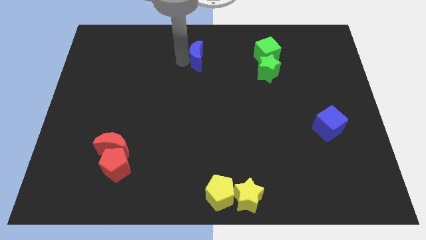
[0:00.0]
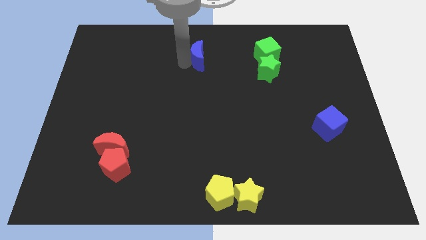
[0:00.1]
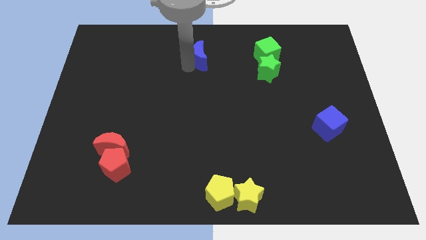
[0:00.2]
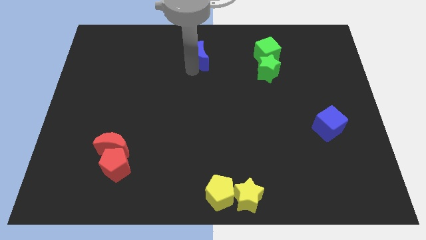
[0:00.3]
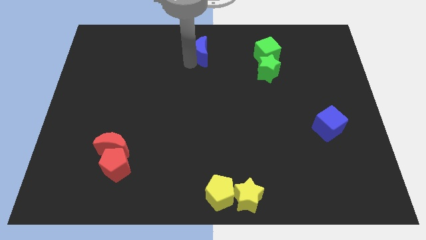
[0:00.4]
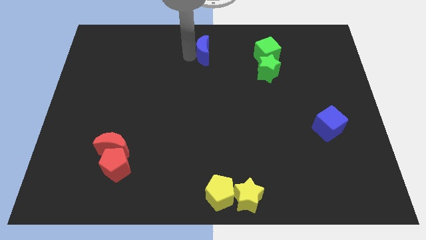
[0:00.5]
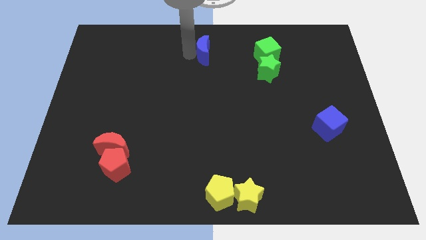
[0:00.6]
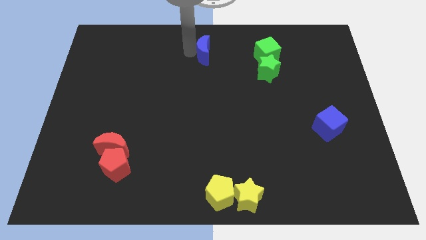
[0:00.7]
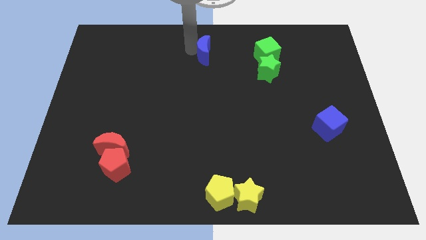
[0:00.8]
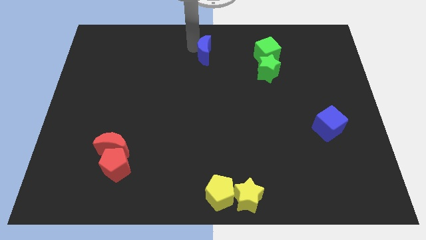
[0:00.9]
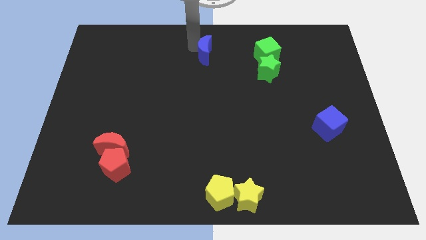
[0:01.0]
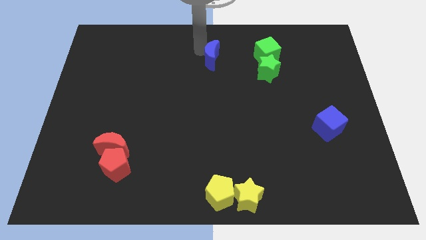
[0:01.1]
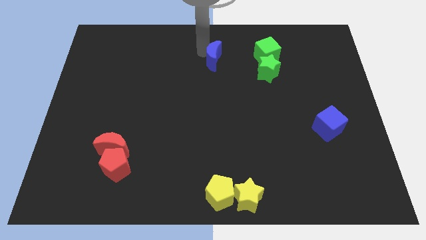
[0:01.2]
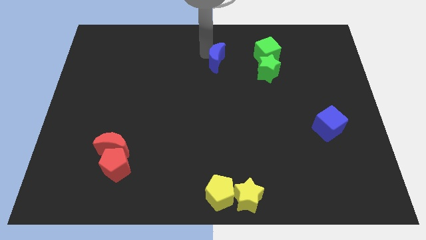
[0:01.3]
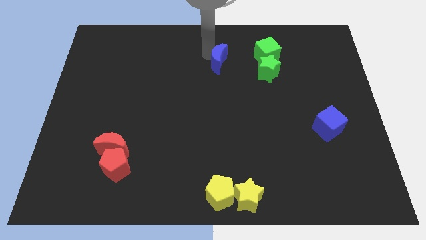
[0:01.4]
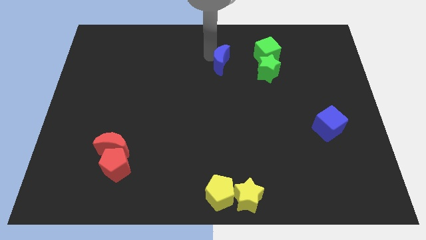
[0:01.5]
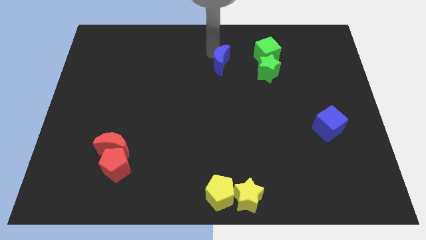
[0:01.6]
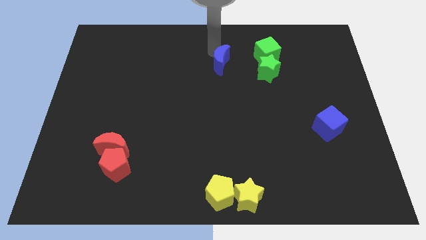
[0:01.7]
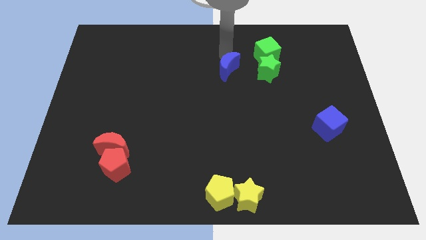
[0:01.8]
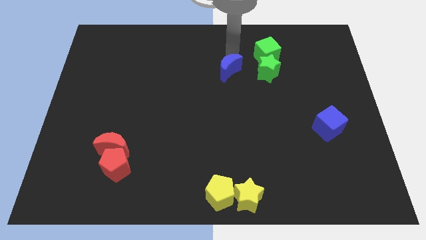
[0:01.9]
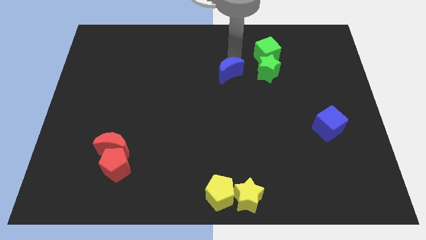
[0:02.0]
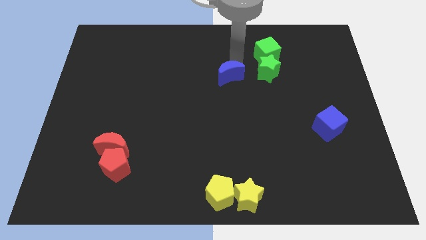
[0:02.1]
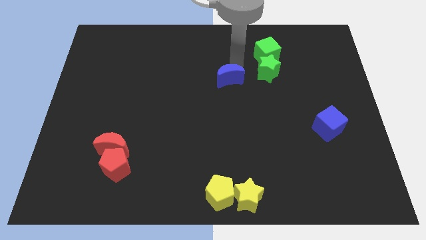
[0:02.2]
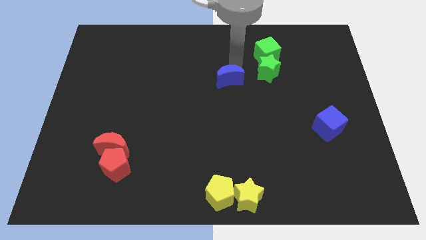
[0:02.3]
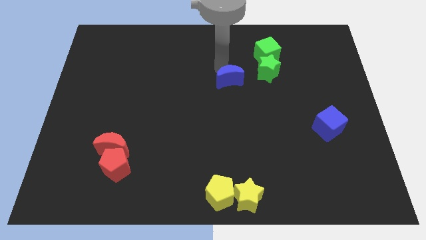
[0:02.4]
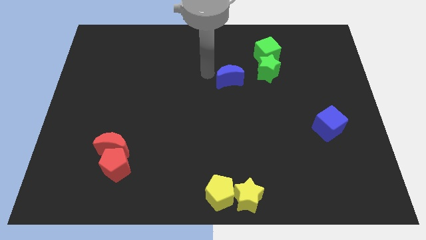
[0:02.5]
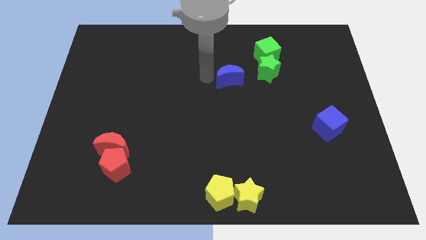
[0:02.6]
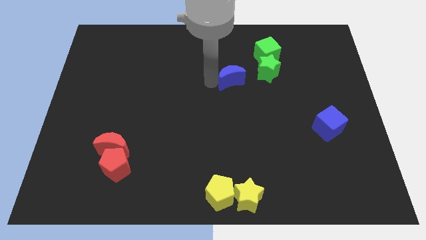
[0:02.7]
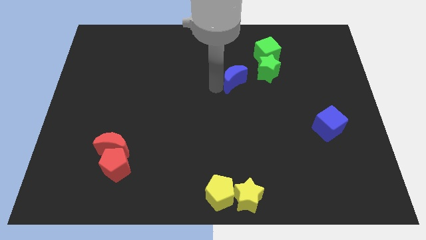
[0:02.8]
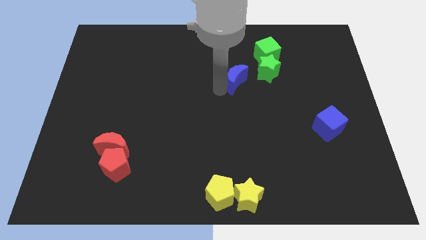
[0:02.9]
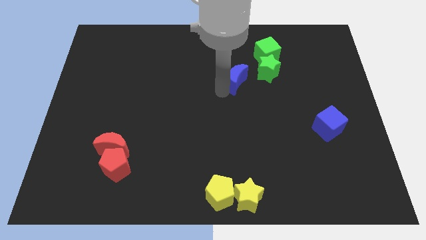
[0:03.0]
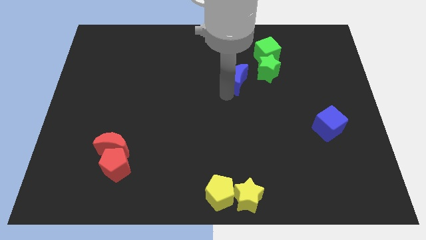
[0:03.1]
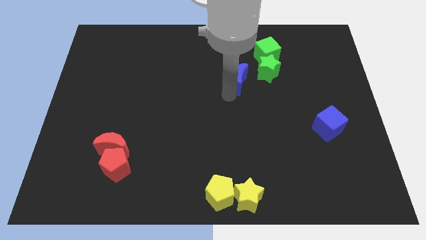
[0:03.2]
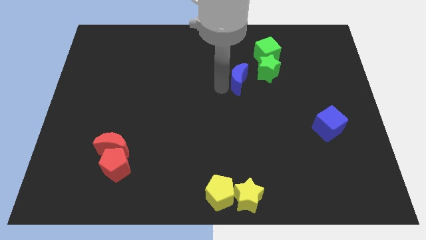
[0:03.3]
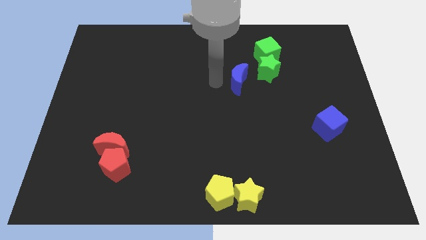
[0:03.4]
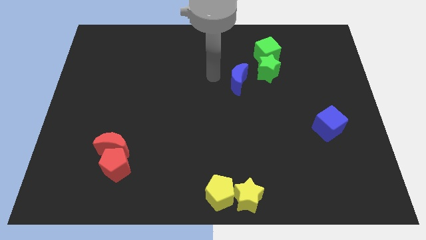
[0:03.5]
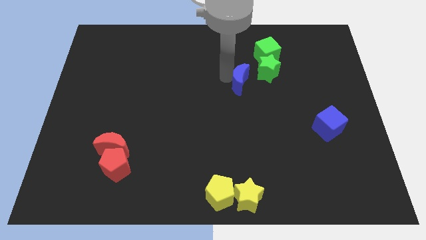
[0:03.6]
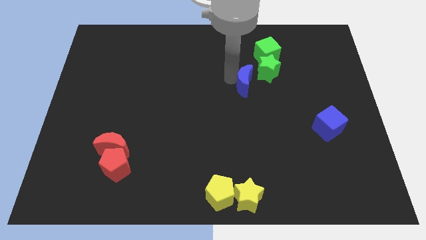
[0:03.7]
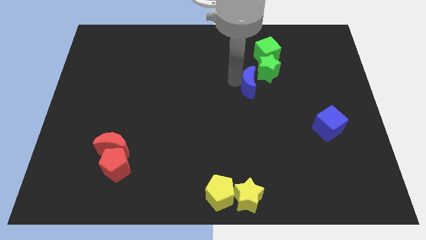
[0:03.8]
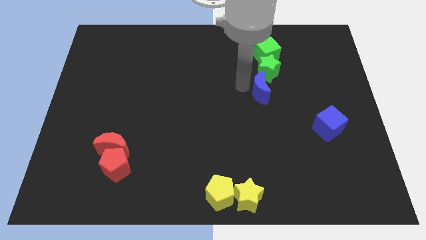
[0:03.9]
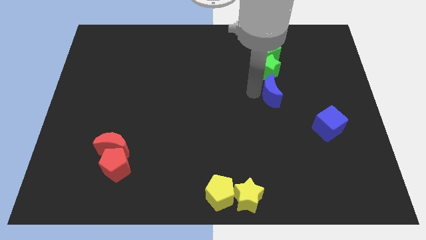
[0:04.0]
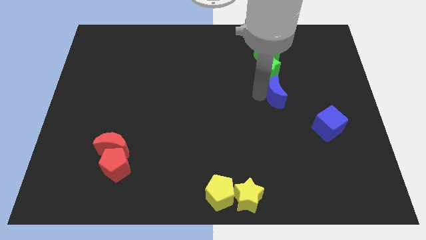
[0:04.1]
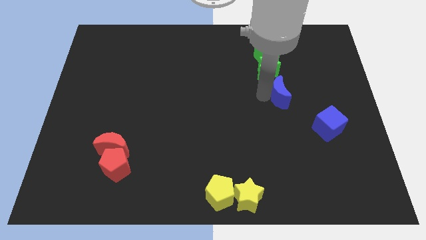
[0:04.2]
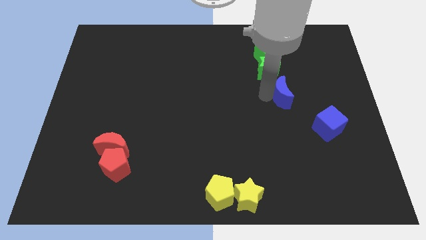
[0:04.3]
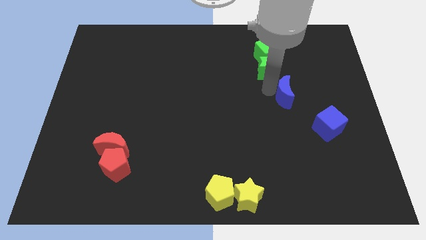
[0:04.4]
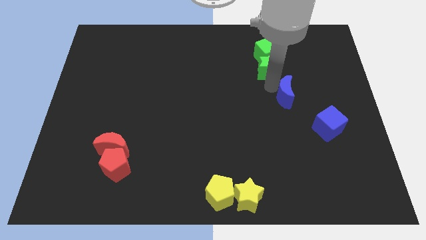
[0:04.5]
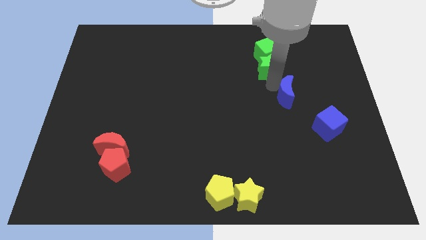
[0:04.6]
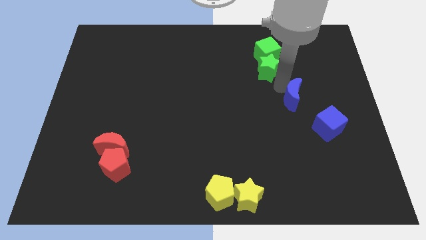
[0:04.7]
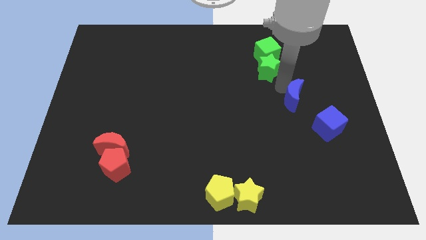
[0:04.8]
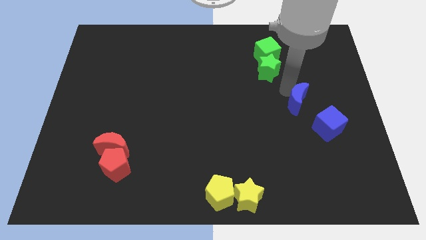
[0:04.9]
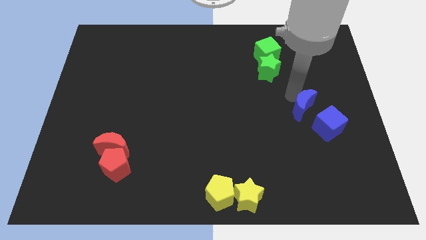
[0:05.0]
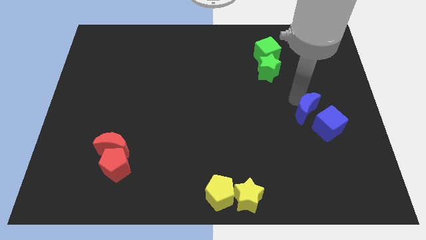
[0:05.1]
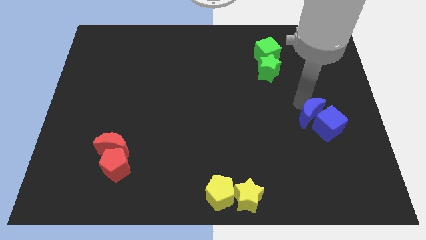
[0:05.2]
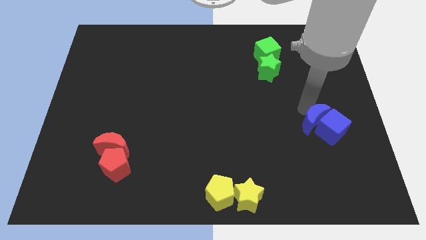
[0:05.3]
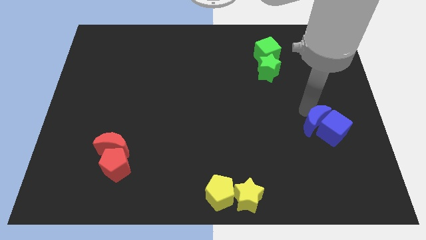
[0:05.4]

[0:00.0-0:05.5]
push the blue crescent into the blue cube

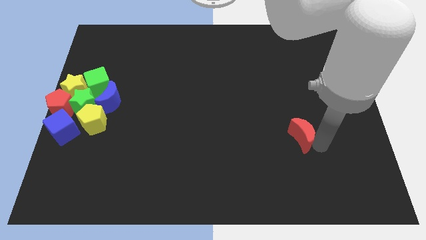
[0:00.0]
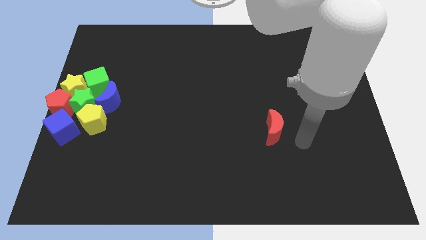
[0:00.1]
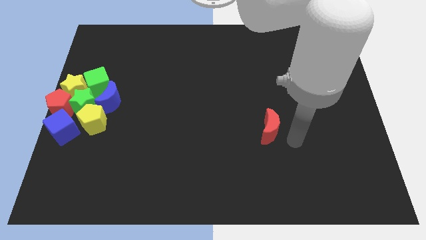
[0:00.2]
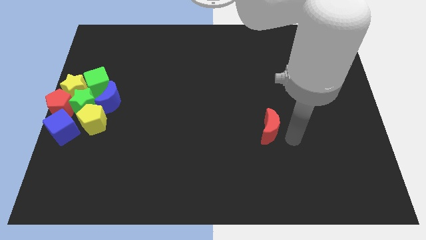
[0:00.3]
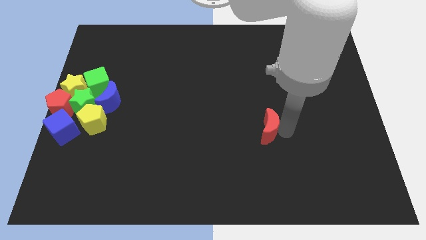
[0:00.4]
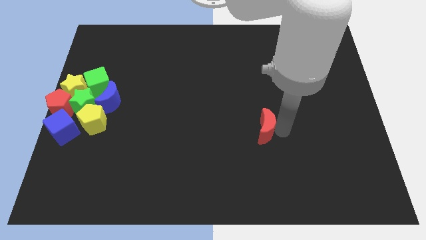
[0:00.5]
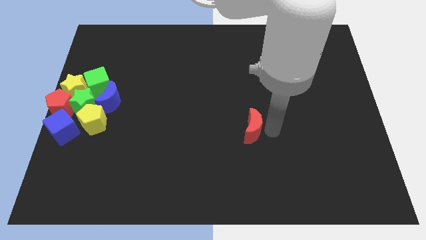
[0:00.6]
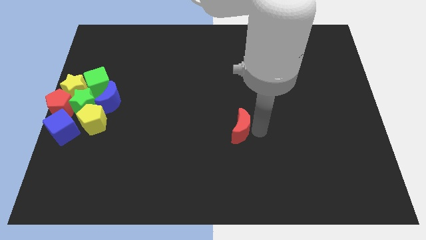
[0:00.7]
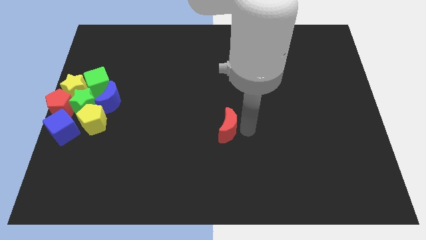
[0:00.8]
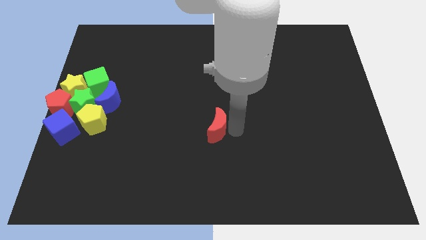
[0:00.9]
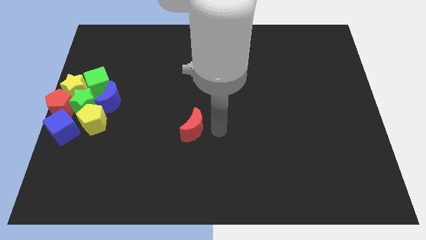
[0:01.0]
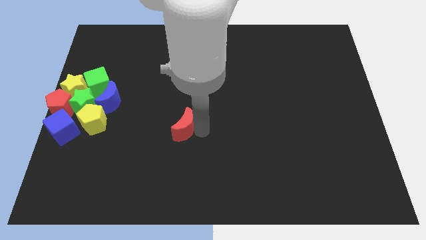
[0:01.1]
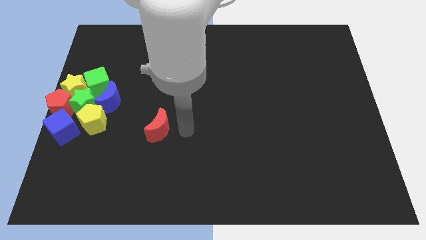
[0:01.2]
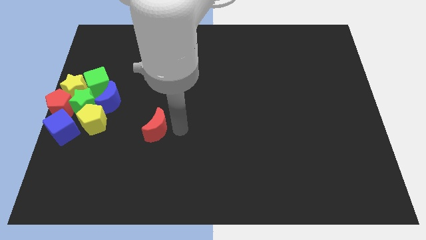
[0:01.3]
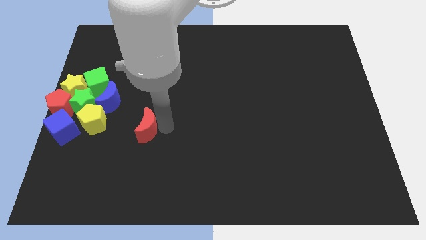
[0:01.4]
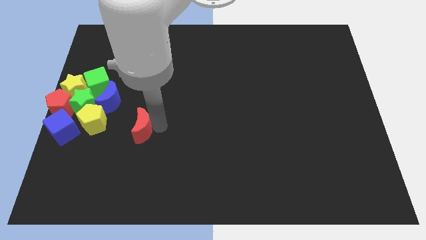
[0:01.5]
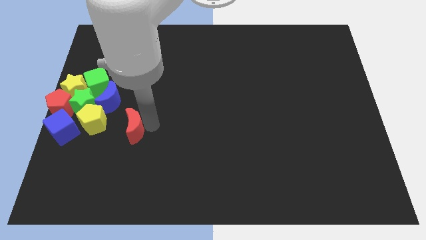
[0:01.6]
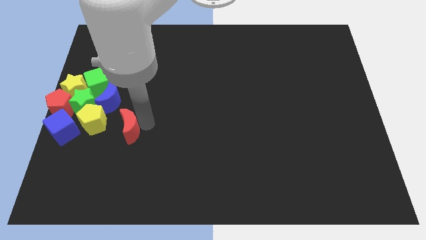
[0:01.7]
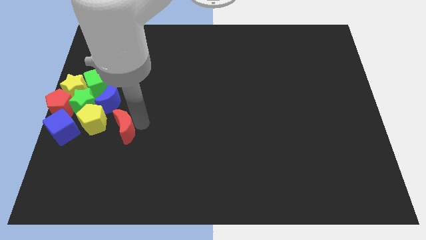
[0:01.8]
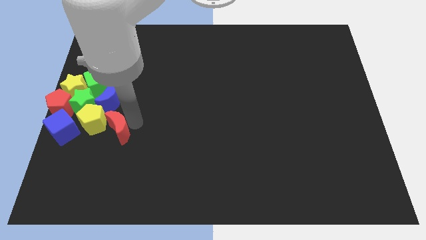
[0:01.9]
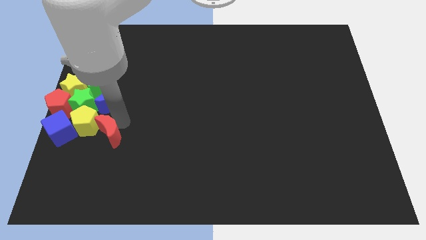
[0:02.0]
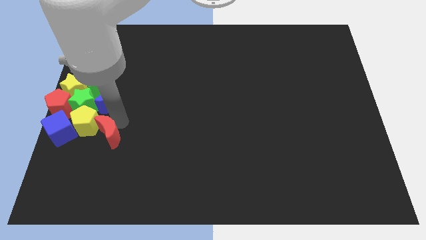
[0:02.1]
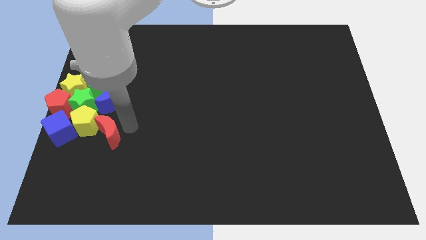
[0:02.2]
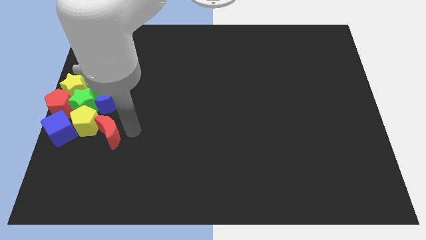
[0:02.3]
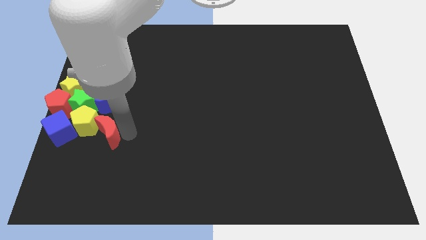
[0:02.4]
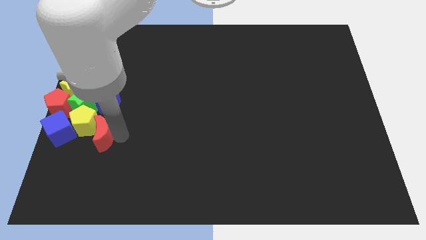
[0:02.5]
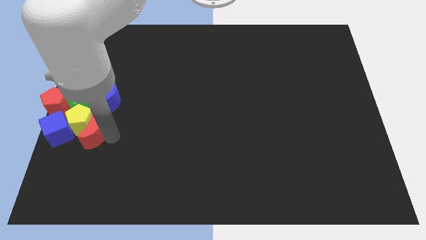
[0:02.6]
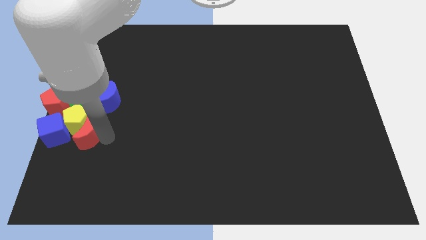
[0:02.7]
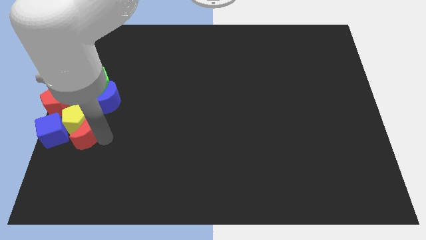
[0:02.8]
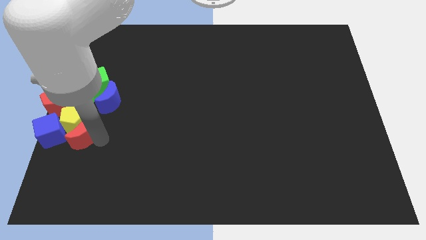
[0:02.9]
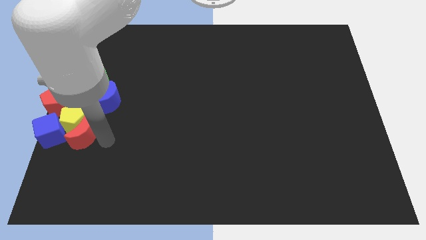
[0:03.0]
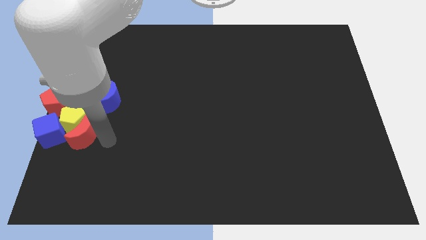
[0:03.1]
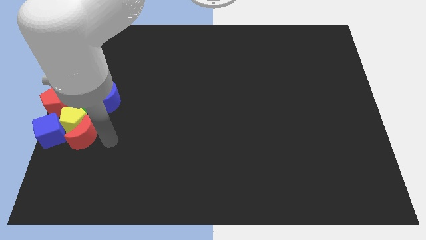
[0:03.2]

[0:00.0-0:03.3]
slide the red crescent into the yellow pentagon
